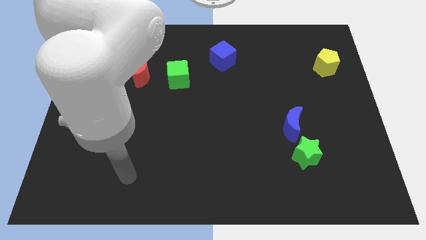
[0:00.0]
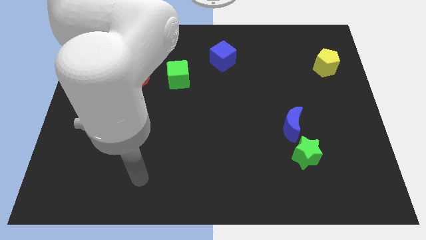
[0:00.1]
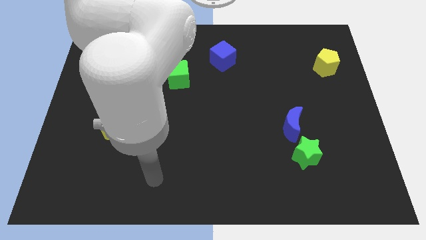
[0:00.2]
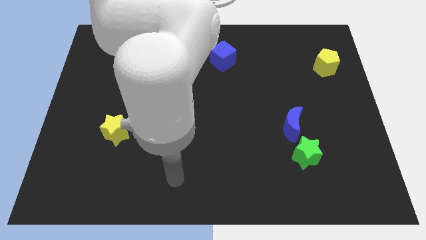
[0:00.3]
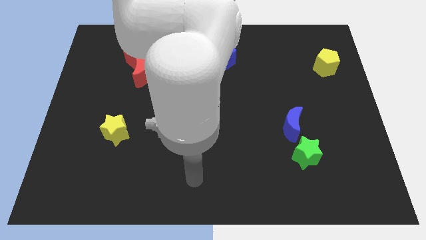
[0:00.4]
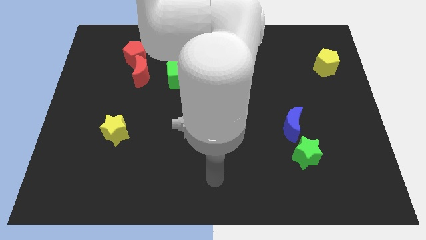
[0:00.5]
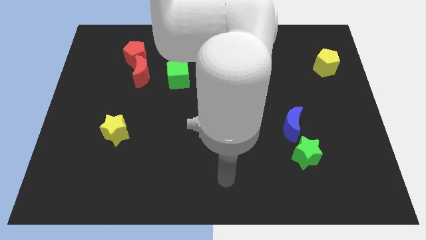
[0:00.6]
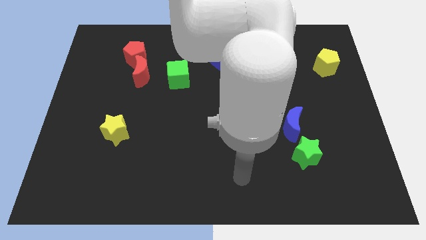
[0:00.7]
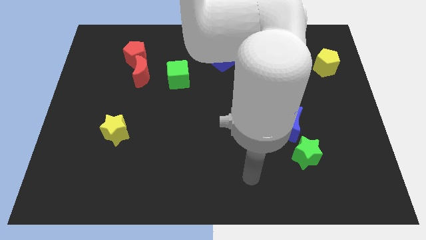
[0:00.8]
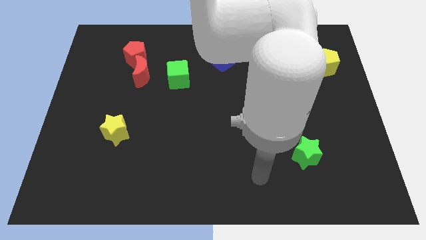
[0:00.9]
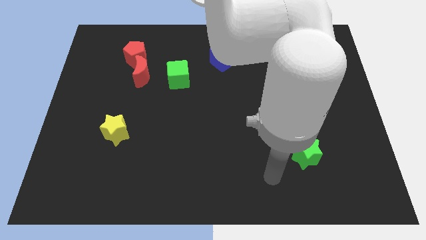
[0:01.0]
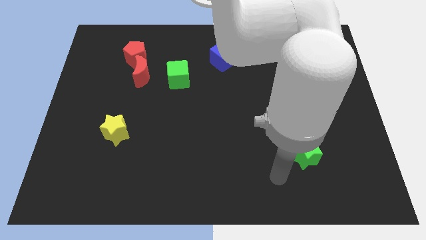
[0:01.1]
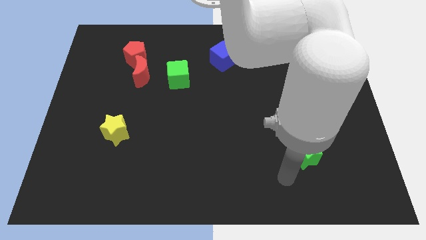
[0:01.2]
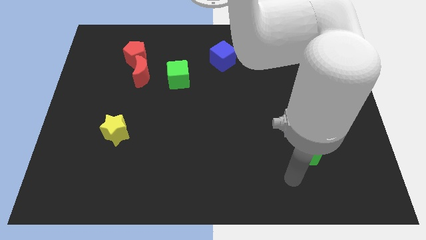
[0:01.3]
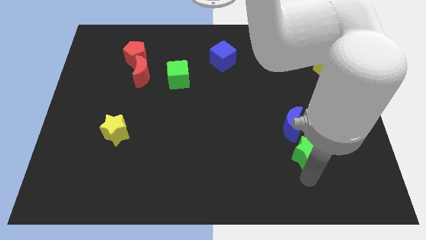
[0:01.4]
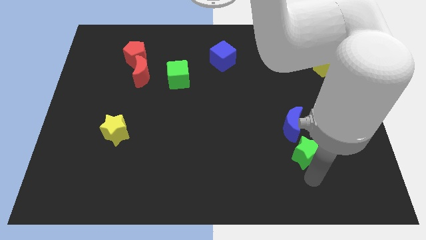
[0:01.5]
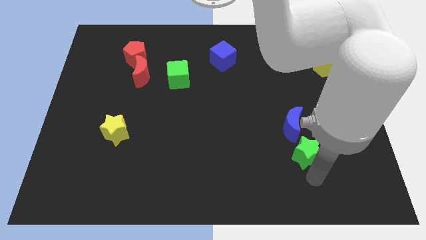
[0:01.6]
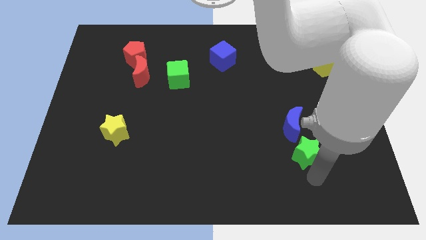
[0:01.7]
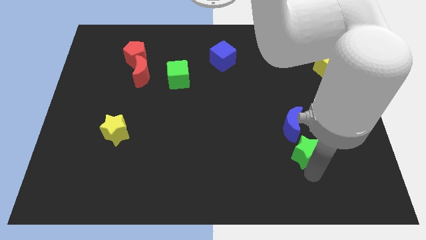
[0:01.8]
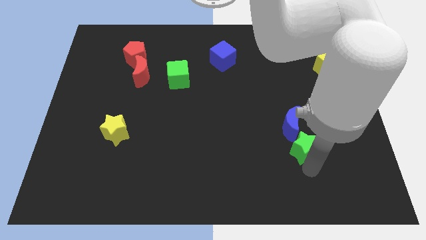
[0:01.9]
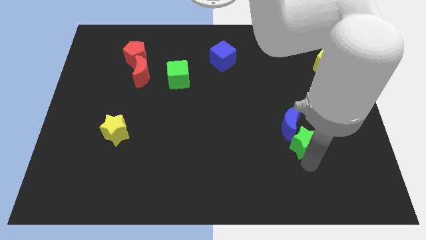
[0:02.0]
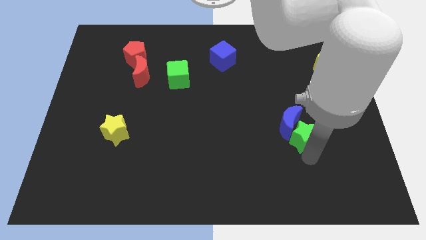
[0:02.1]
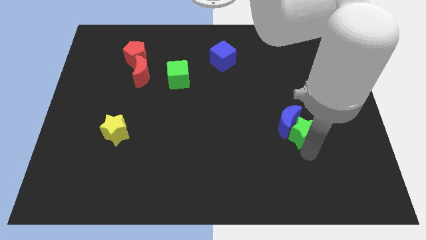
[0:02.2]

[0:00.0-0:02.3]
put the green star to the blue moon

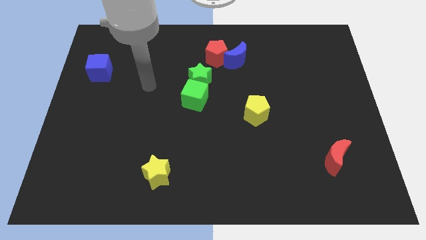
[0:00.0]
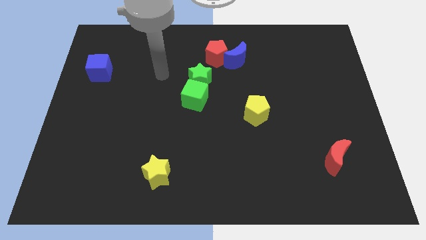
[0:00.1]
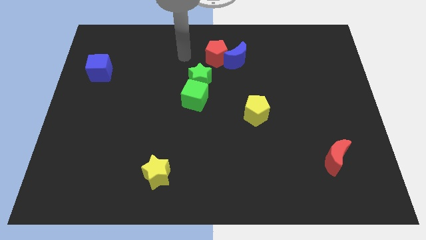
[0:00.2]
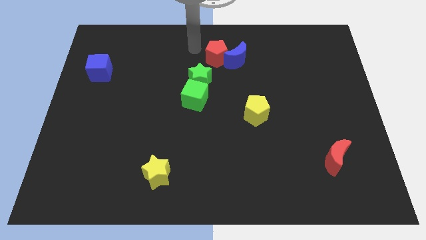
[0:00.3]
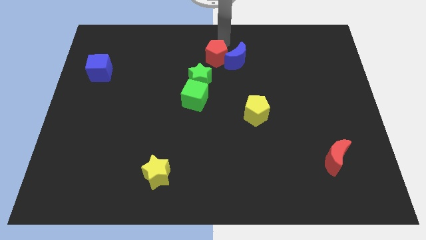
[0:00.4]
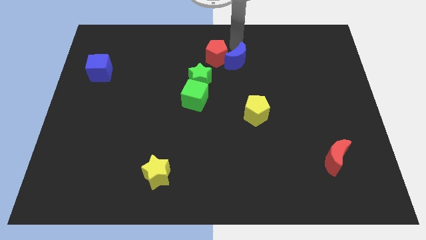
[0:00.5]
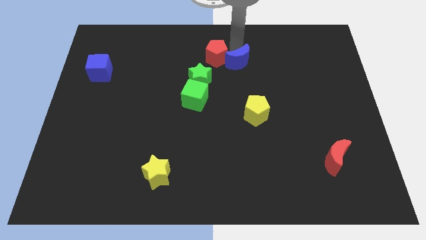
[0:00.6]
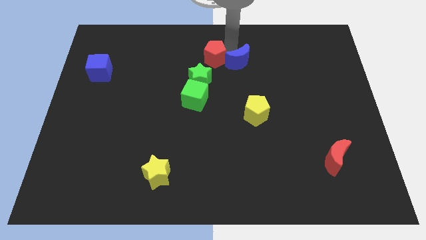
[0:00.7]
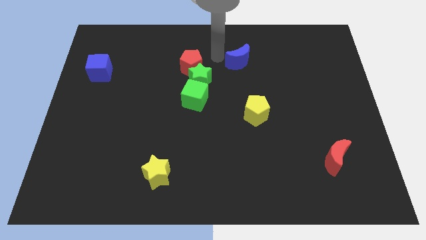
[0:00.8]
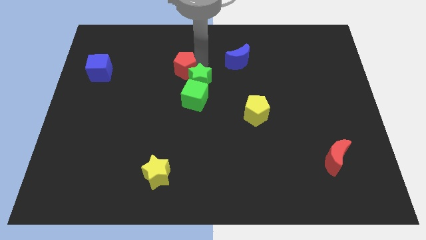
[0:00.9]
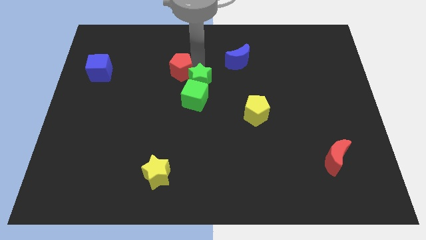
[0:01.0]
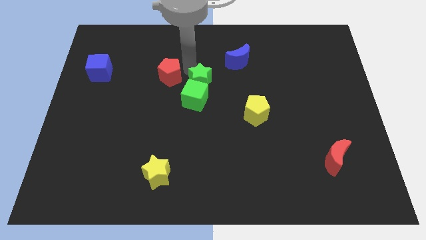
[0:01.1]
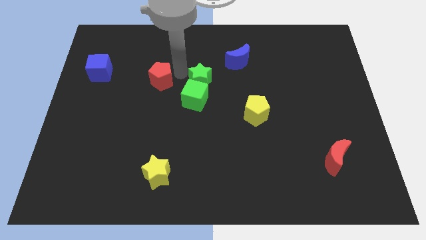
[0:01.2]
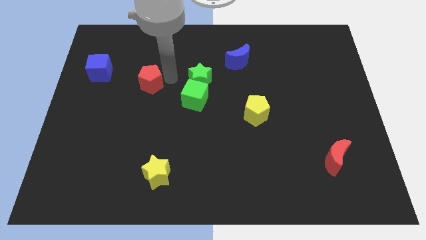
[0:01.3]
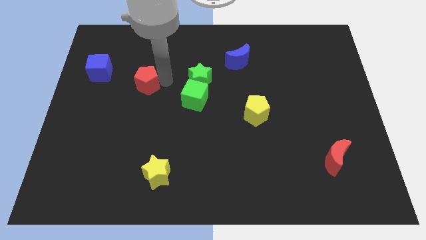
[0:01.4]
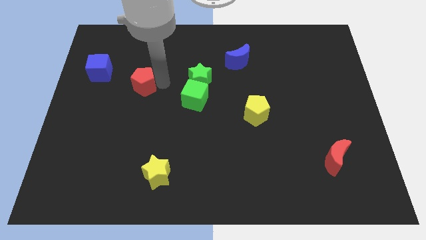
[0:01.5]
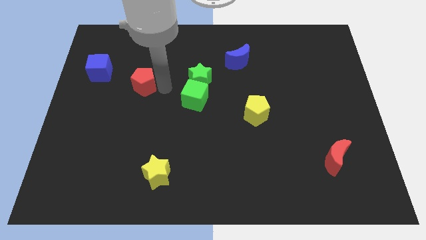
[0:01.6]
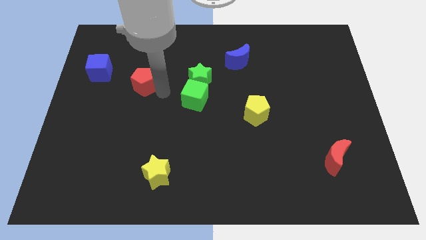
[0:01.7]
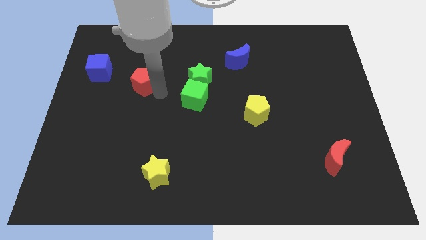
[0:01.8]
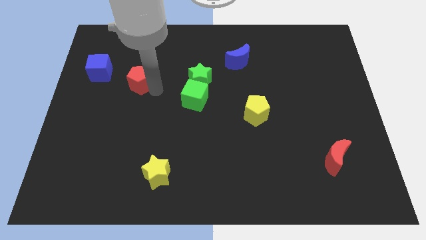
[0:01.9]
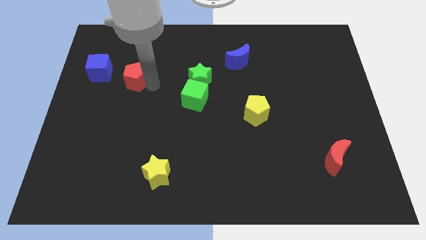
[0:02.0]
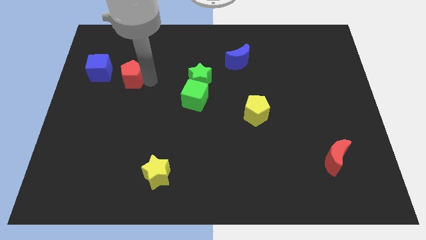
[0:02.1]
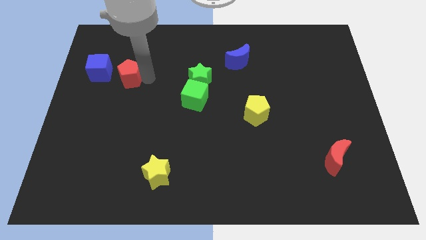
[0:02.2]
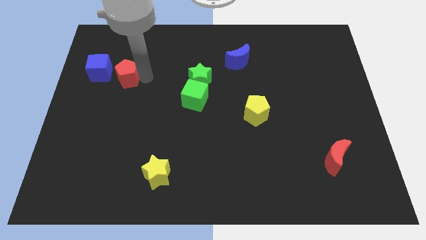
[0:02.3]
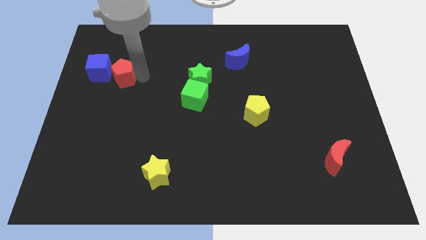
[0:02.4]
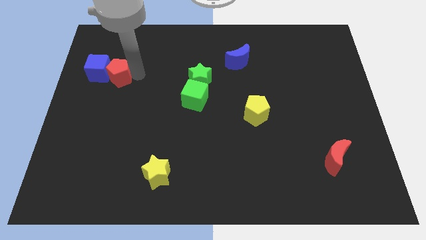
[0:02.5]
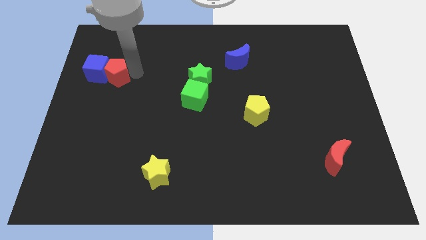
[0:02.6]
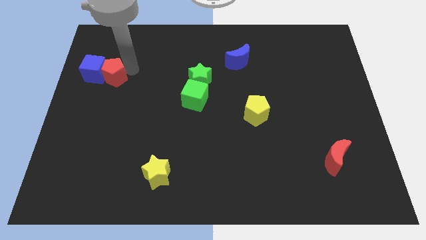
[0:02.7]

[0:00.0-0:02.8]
put the red pentagon close to the blue cube

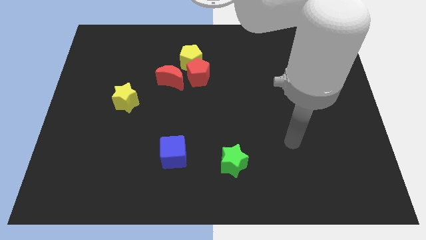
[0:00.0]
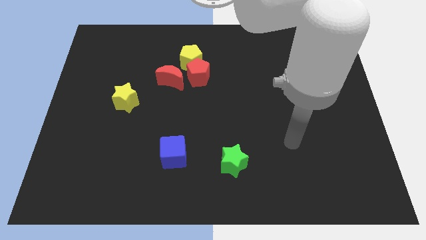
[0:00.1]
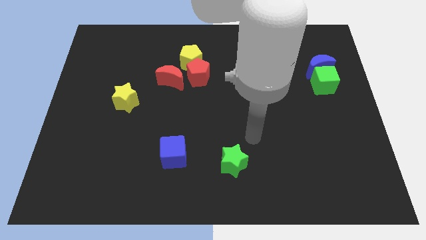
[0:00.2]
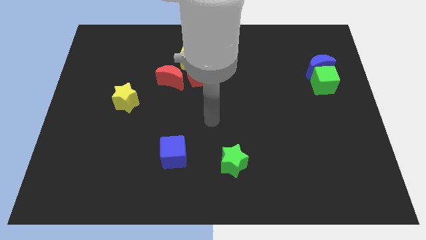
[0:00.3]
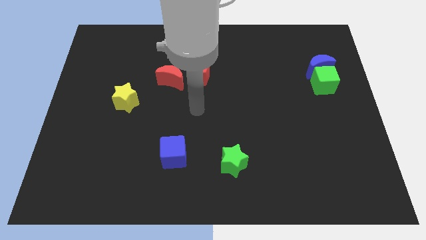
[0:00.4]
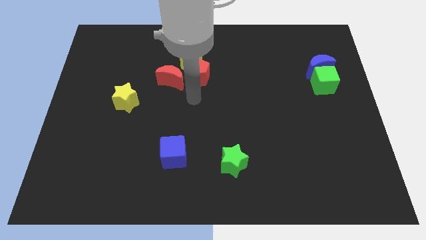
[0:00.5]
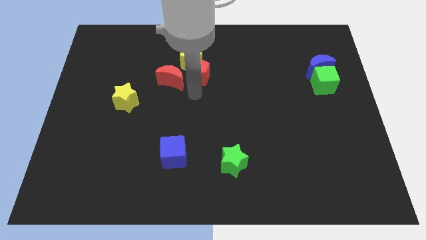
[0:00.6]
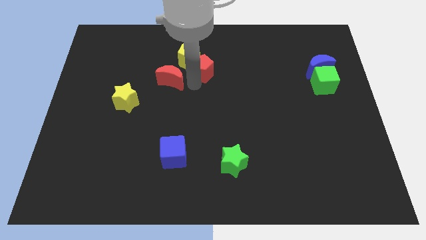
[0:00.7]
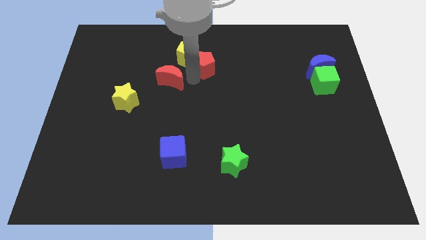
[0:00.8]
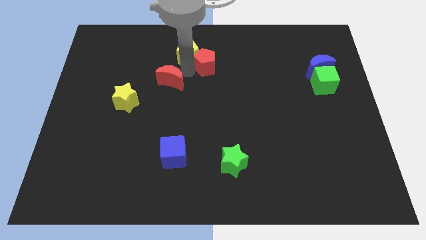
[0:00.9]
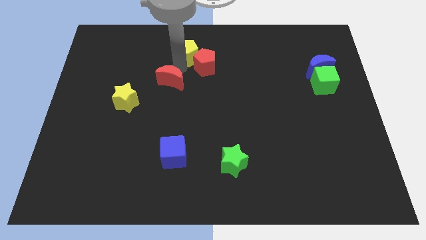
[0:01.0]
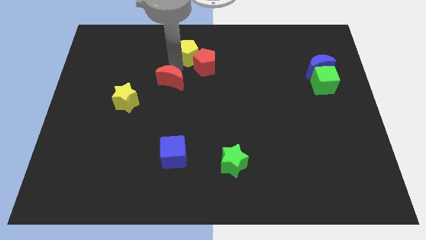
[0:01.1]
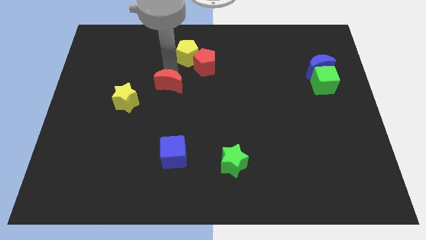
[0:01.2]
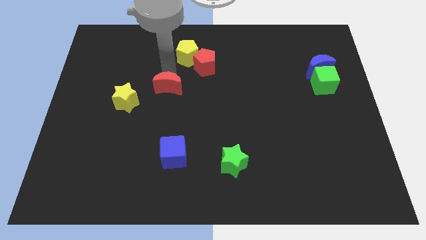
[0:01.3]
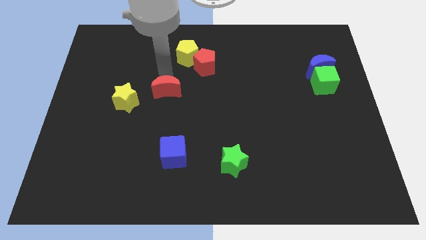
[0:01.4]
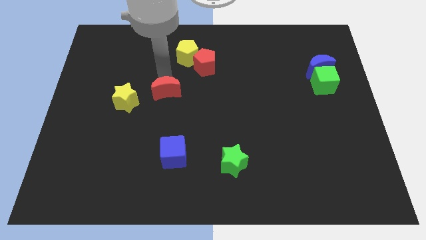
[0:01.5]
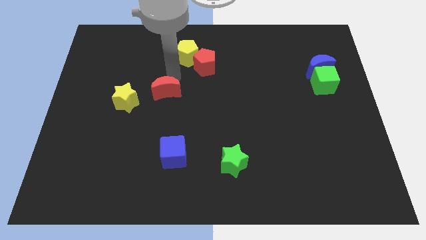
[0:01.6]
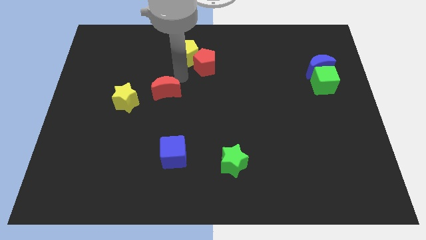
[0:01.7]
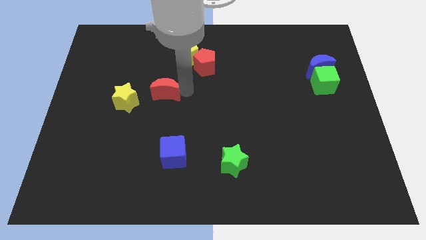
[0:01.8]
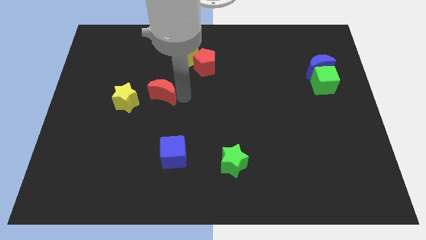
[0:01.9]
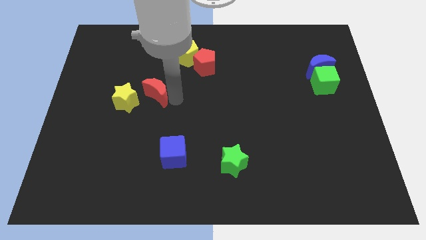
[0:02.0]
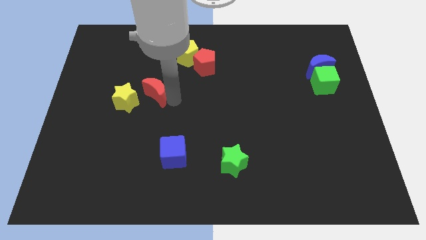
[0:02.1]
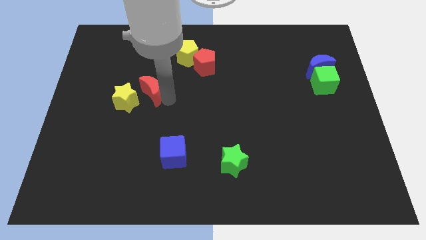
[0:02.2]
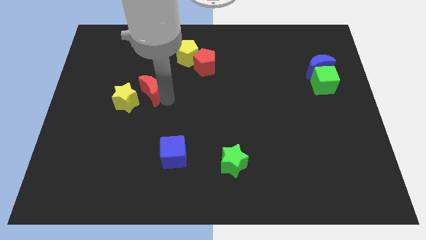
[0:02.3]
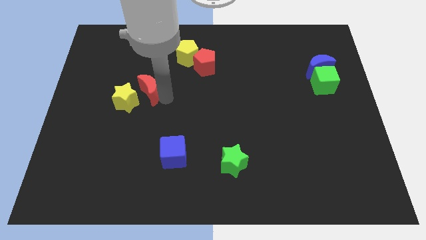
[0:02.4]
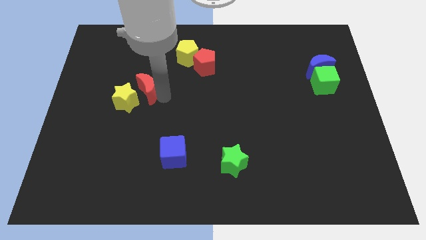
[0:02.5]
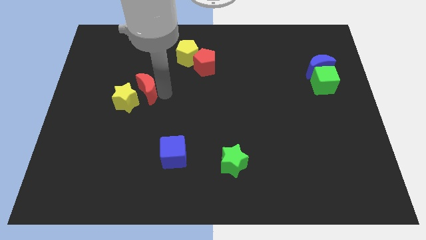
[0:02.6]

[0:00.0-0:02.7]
push the red moon close to the yellow star

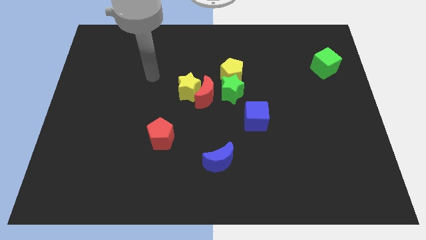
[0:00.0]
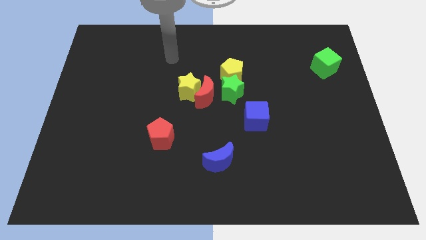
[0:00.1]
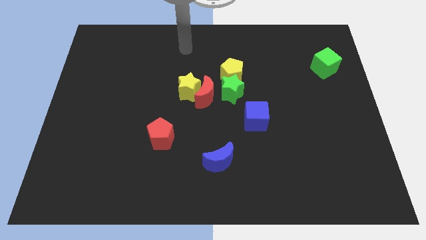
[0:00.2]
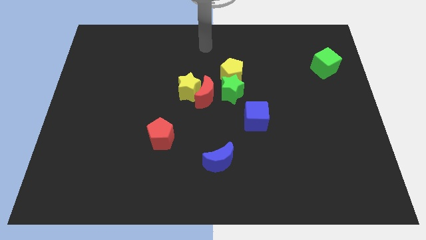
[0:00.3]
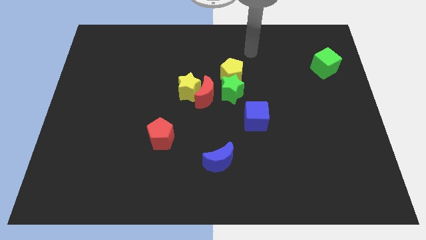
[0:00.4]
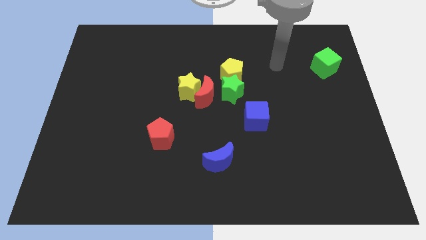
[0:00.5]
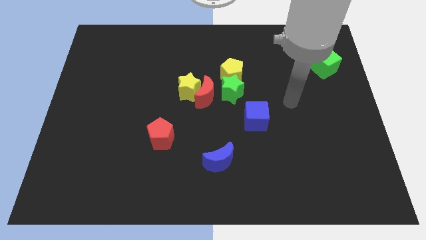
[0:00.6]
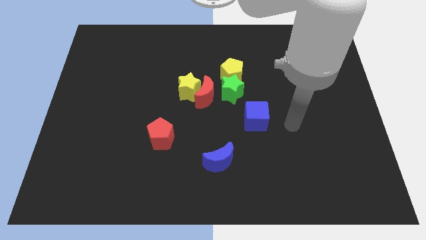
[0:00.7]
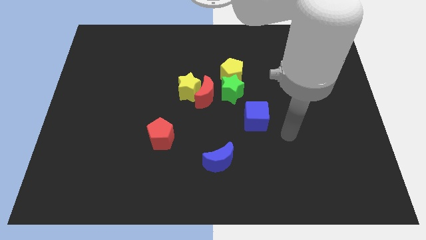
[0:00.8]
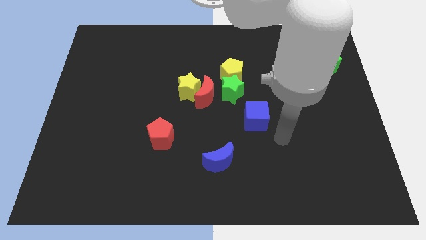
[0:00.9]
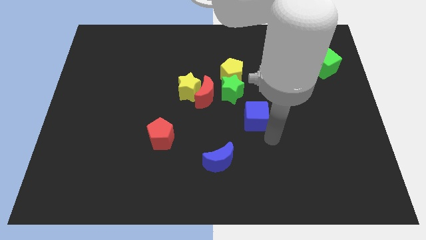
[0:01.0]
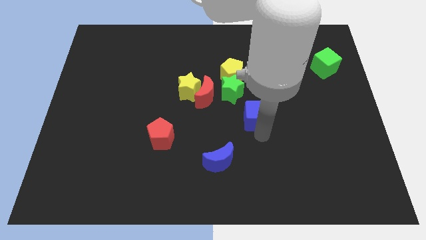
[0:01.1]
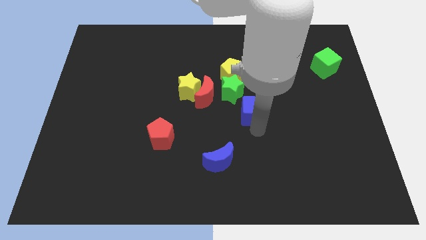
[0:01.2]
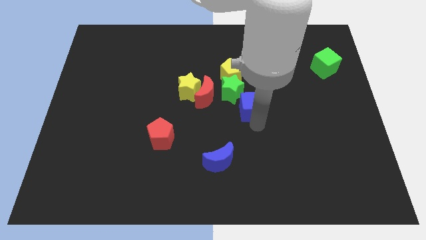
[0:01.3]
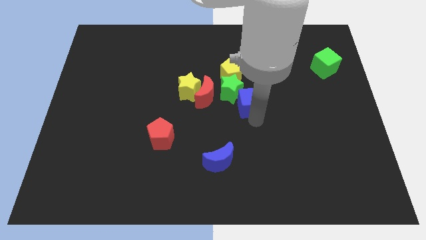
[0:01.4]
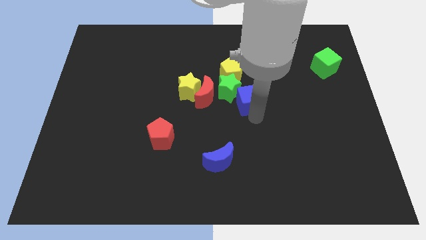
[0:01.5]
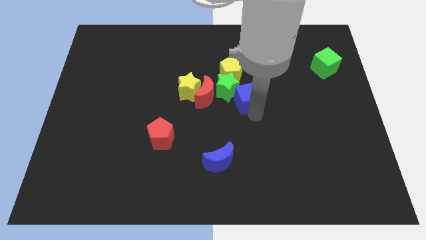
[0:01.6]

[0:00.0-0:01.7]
put the blue cube to the green star
